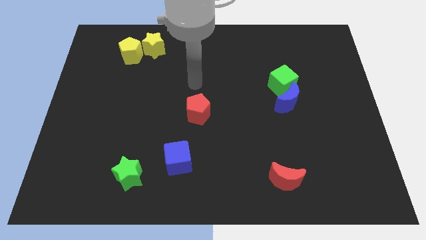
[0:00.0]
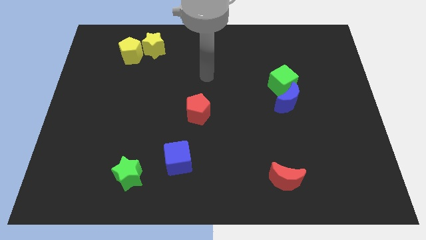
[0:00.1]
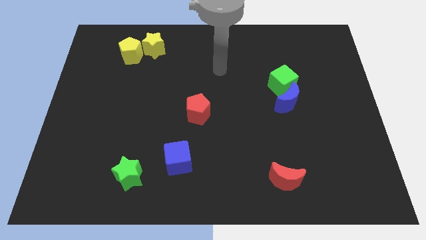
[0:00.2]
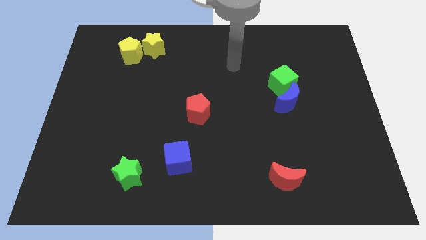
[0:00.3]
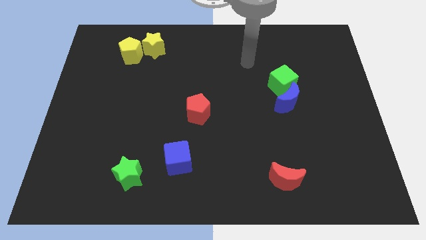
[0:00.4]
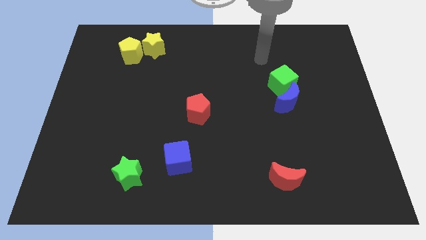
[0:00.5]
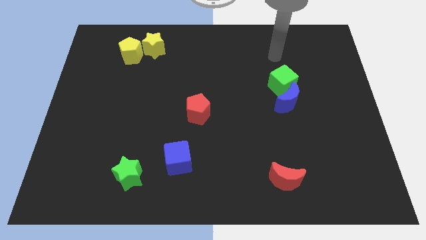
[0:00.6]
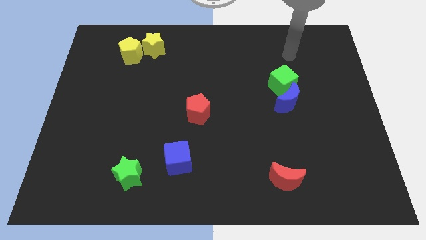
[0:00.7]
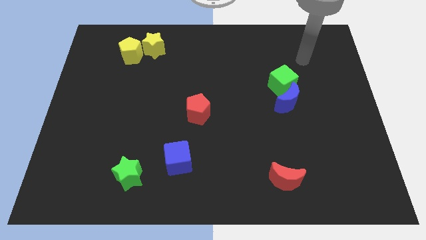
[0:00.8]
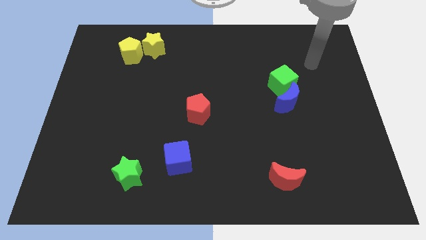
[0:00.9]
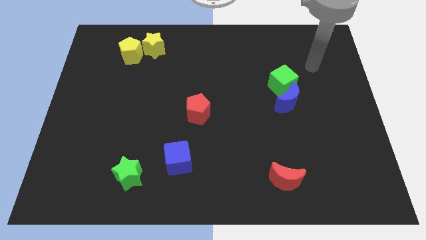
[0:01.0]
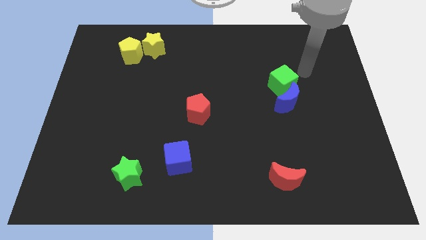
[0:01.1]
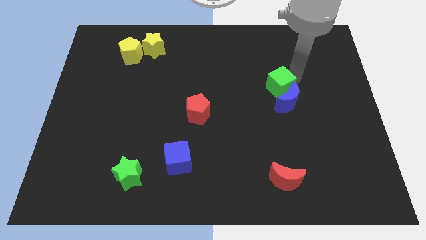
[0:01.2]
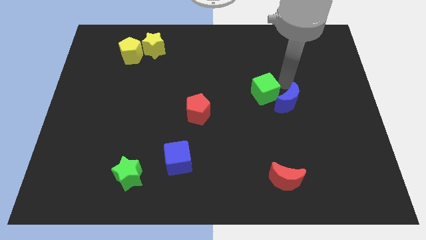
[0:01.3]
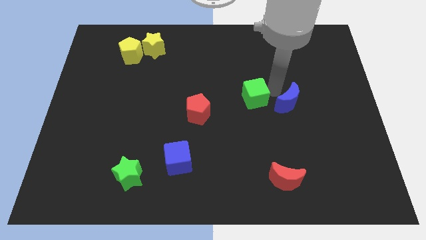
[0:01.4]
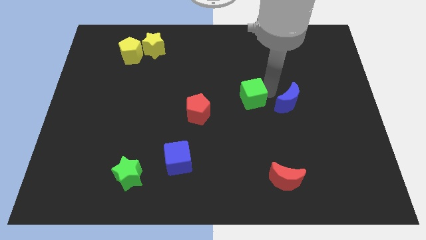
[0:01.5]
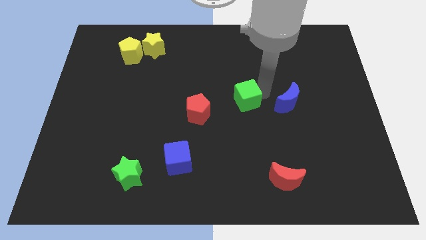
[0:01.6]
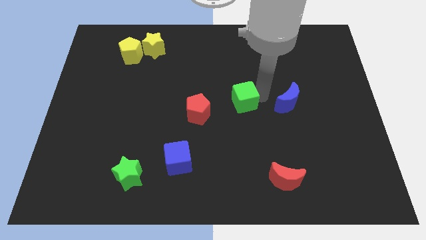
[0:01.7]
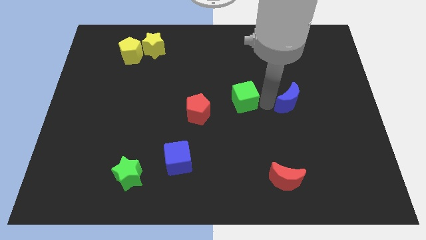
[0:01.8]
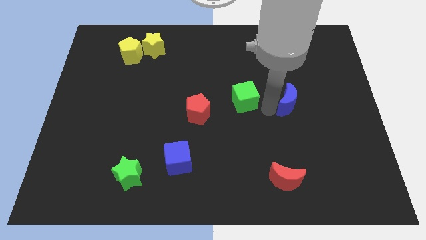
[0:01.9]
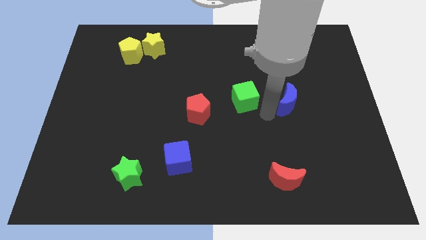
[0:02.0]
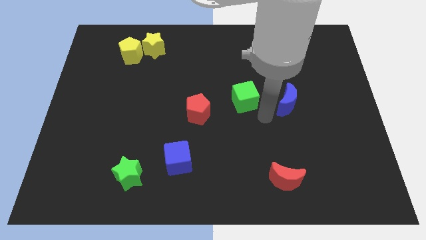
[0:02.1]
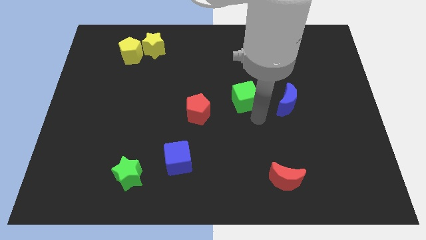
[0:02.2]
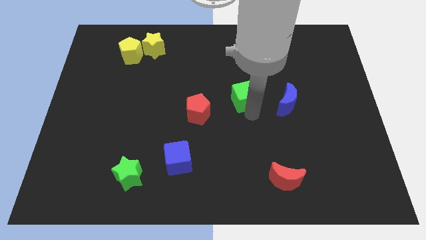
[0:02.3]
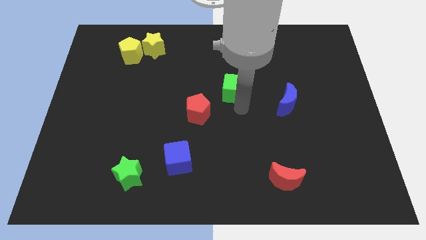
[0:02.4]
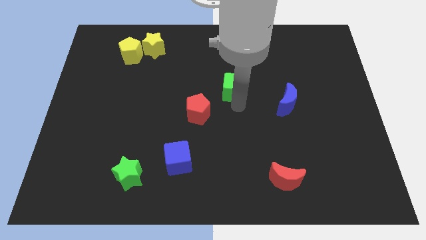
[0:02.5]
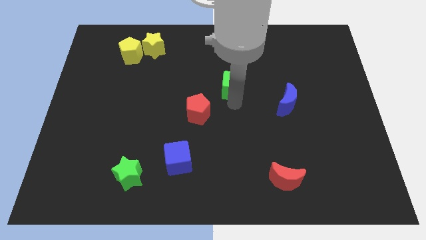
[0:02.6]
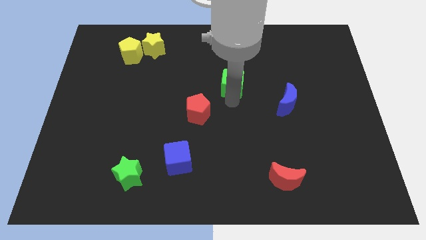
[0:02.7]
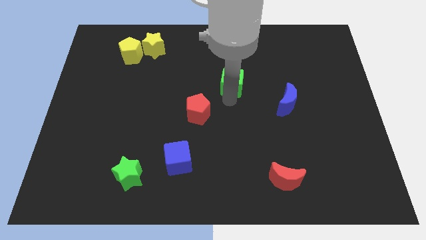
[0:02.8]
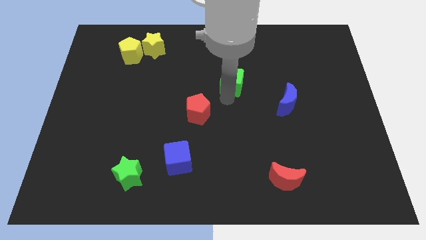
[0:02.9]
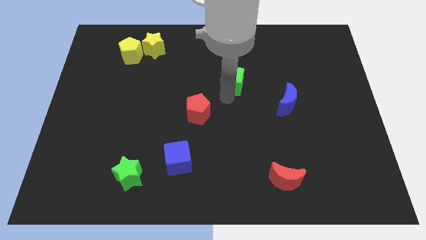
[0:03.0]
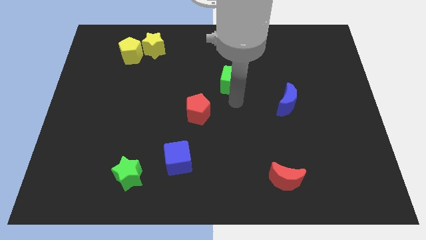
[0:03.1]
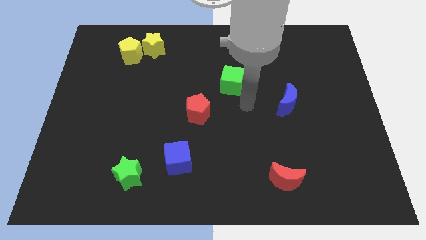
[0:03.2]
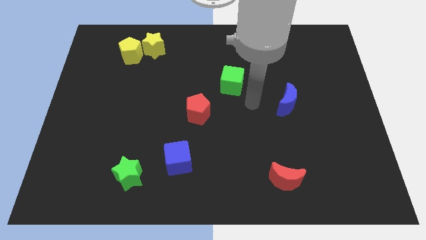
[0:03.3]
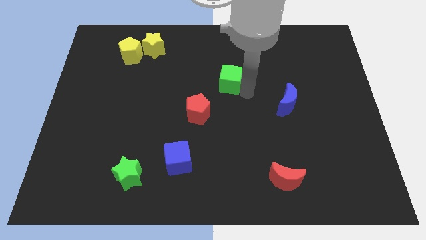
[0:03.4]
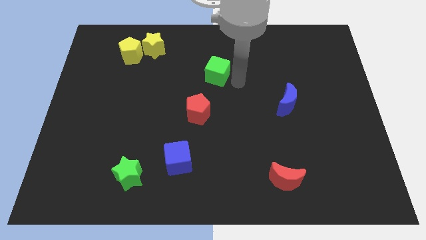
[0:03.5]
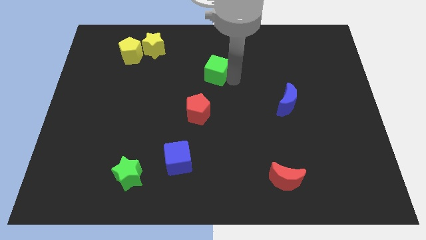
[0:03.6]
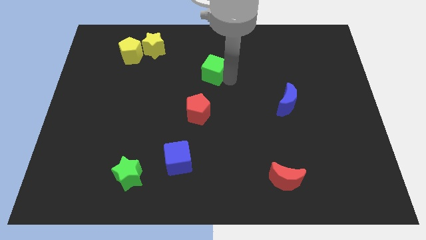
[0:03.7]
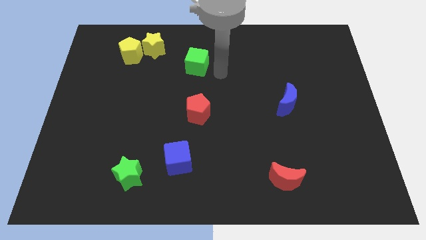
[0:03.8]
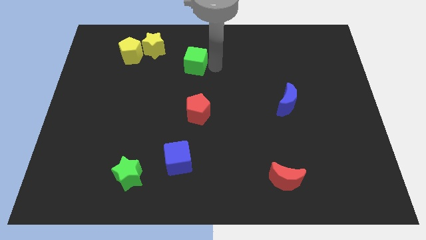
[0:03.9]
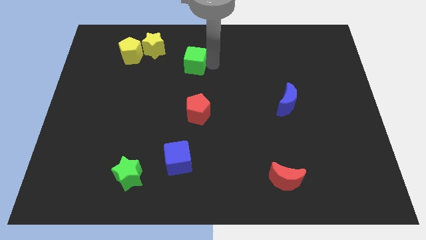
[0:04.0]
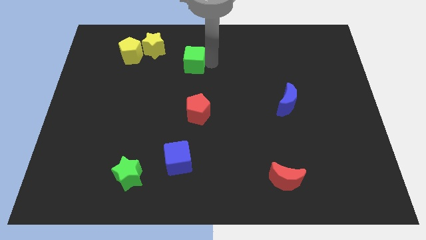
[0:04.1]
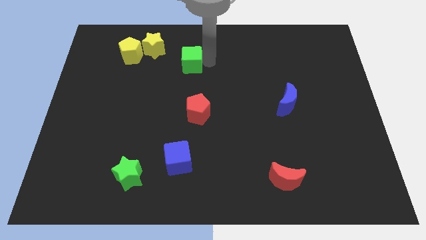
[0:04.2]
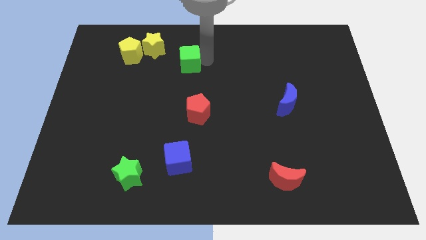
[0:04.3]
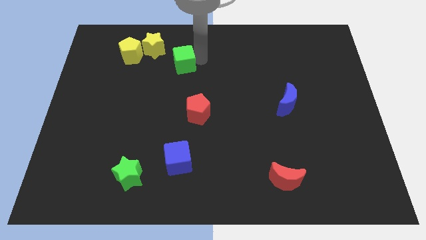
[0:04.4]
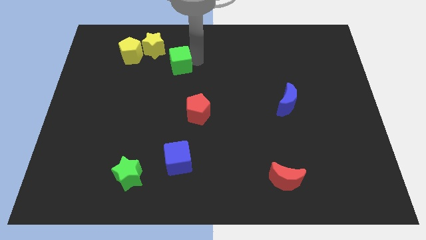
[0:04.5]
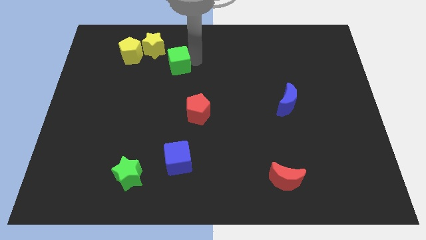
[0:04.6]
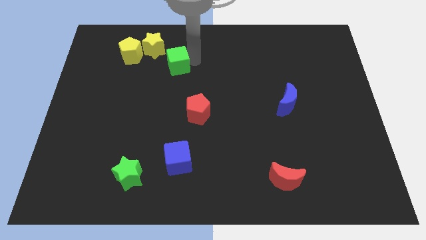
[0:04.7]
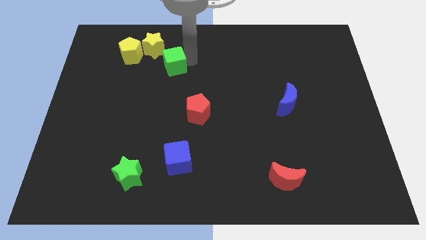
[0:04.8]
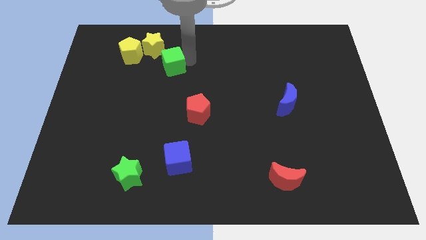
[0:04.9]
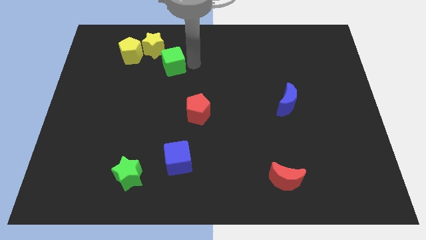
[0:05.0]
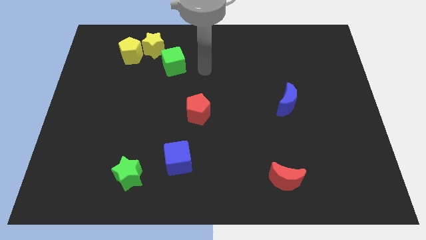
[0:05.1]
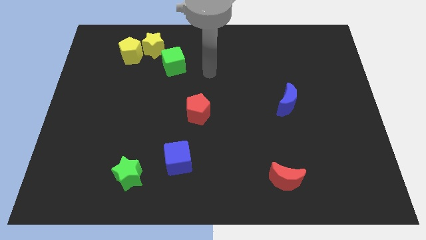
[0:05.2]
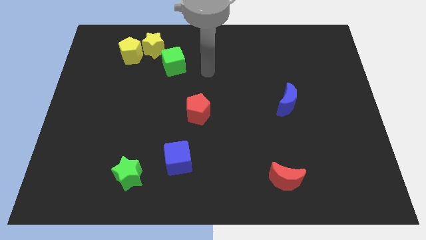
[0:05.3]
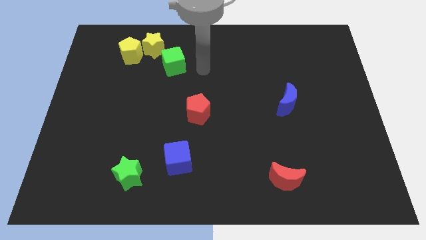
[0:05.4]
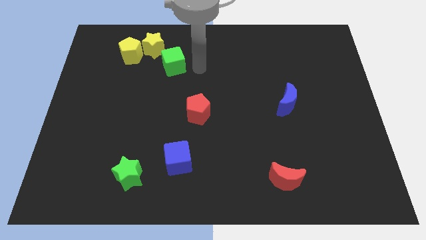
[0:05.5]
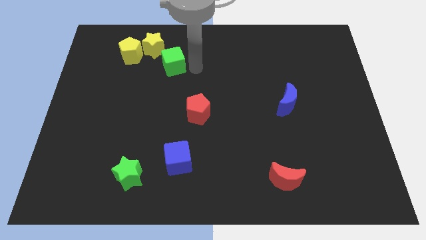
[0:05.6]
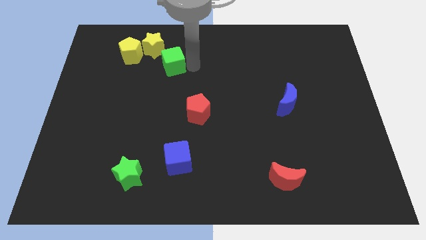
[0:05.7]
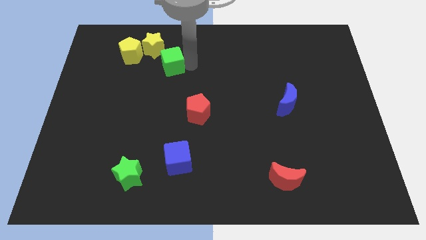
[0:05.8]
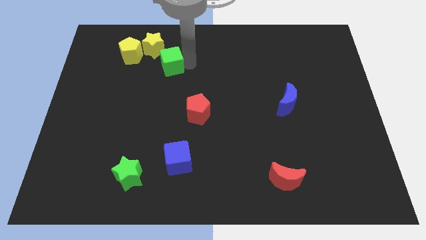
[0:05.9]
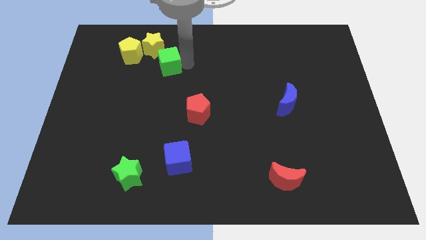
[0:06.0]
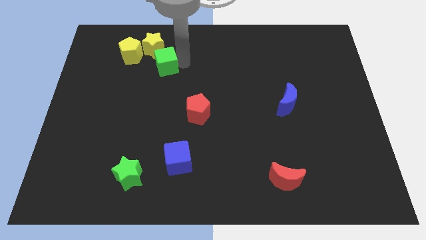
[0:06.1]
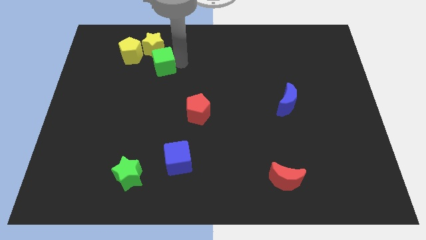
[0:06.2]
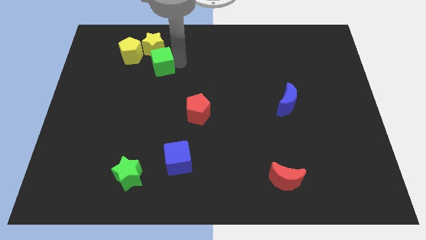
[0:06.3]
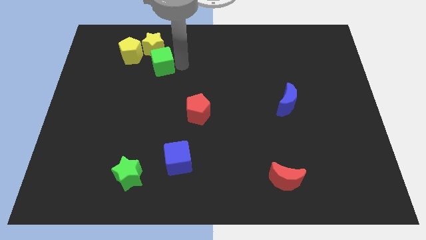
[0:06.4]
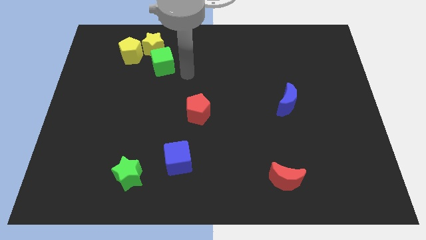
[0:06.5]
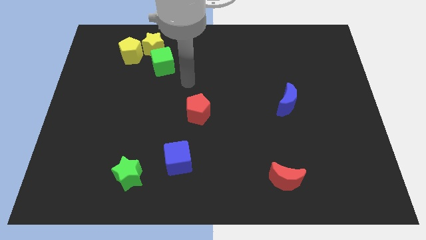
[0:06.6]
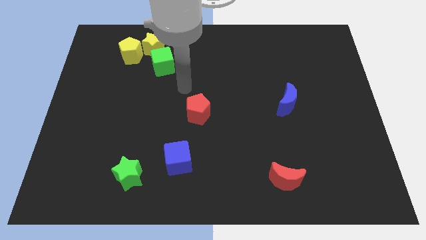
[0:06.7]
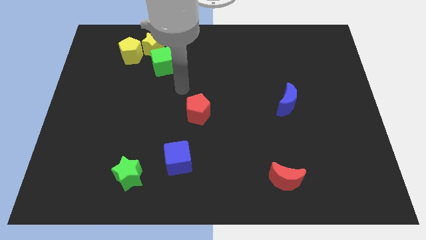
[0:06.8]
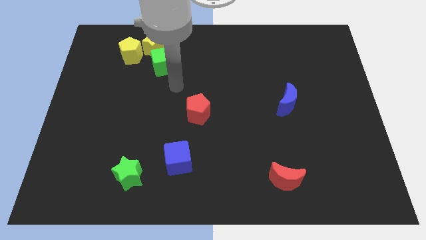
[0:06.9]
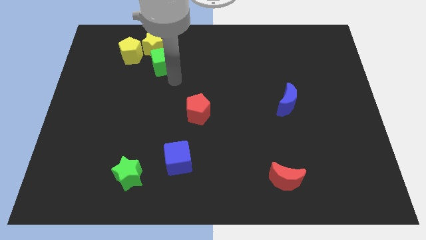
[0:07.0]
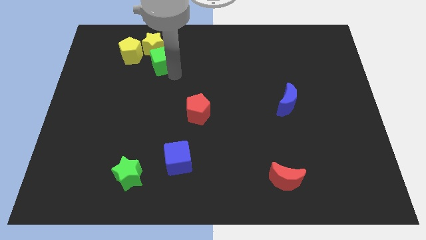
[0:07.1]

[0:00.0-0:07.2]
push the green cube towards the yellow blocks

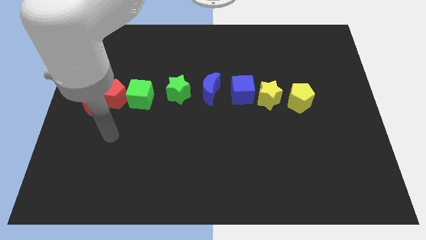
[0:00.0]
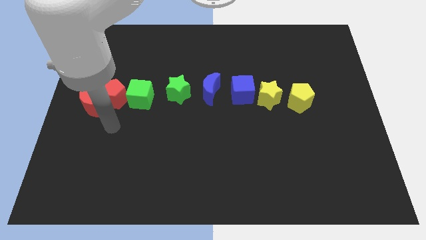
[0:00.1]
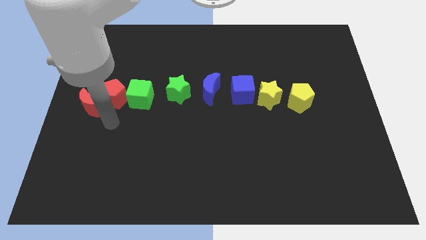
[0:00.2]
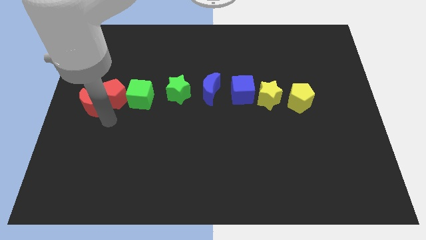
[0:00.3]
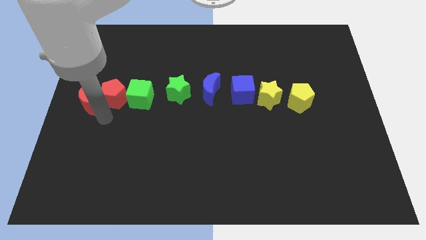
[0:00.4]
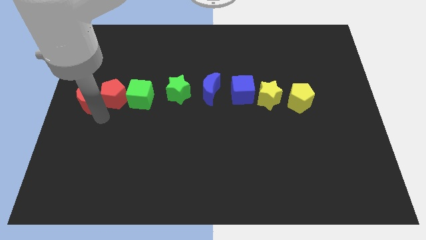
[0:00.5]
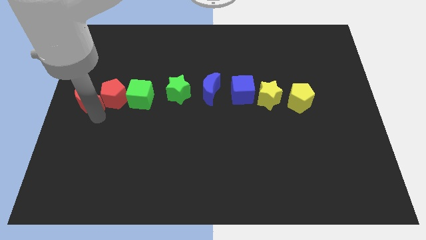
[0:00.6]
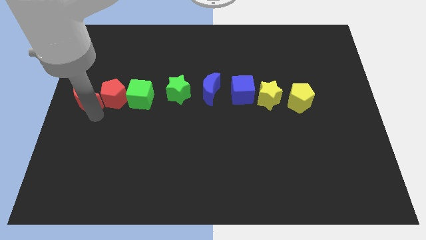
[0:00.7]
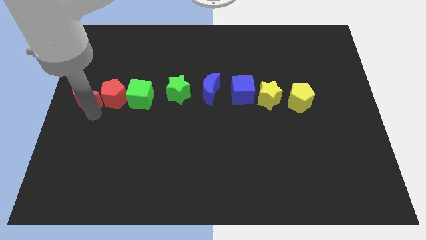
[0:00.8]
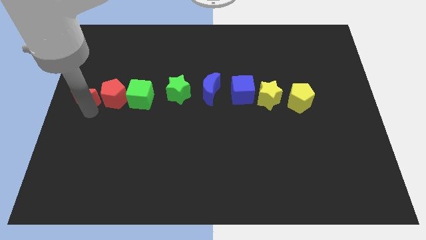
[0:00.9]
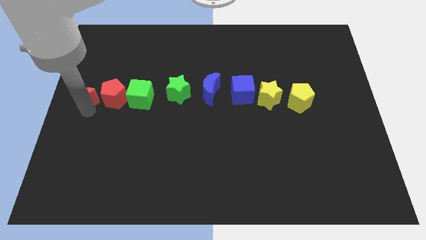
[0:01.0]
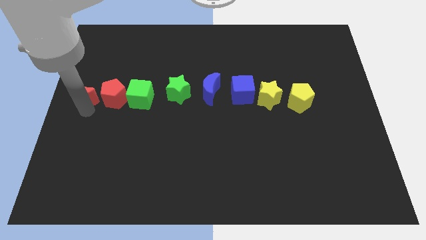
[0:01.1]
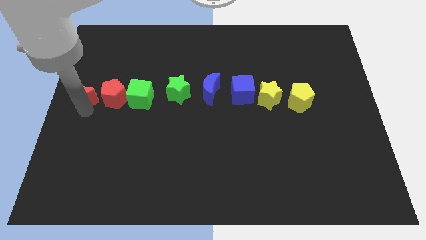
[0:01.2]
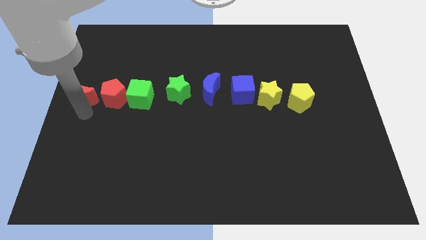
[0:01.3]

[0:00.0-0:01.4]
place the red moon to the left of the red pentagon
